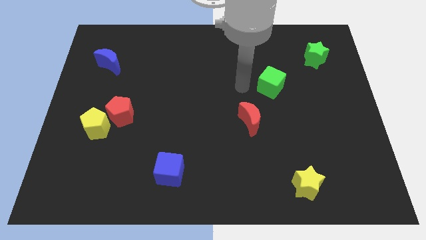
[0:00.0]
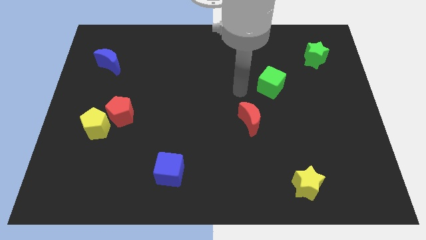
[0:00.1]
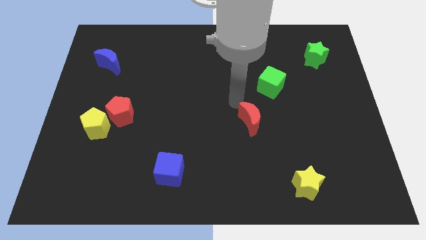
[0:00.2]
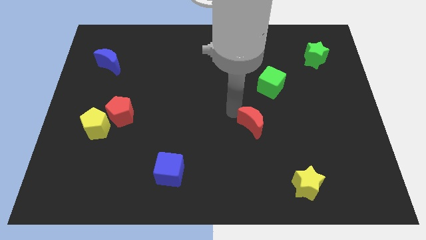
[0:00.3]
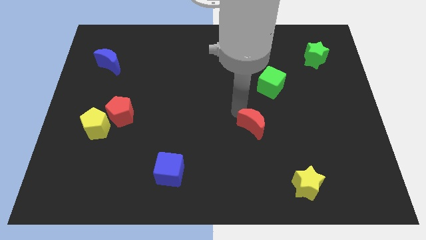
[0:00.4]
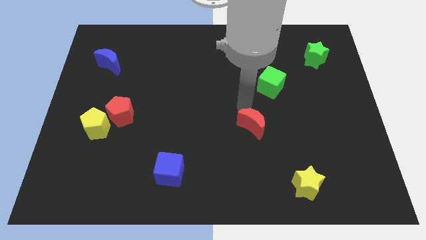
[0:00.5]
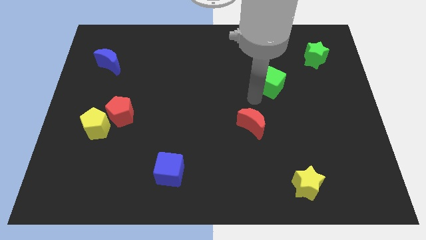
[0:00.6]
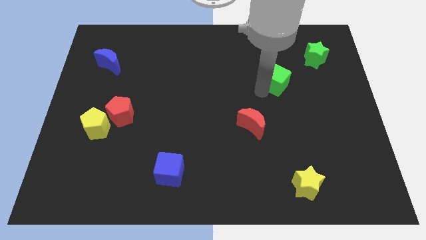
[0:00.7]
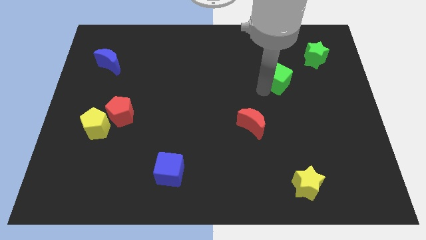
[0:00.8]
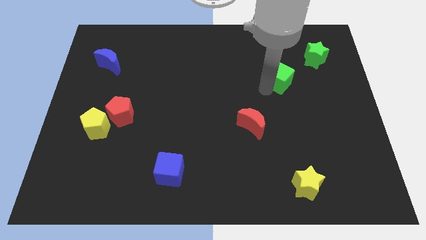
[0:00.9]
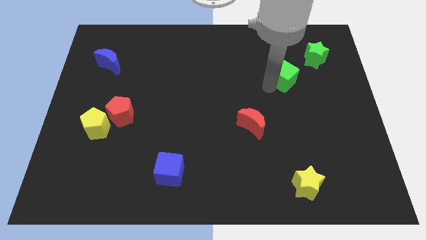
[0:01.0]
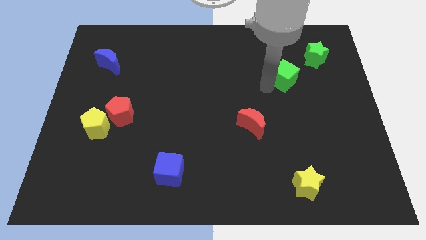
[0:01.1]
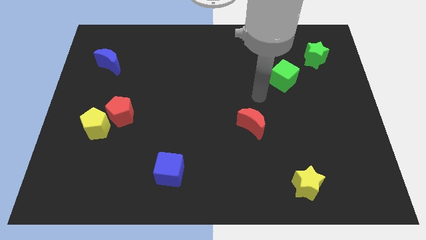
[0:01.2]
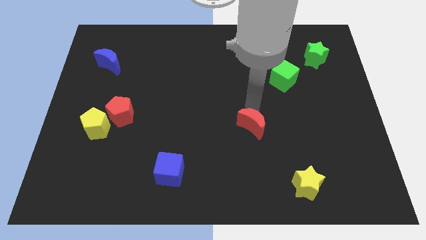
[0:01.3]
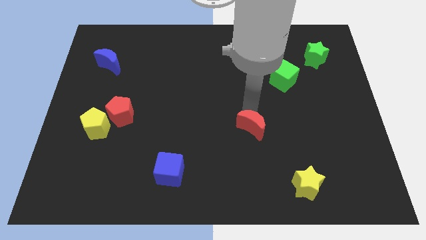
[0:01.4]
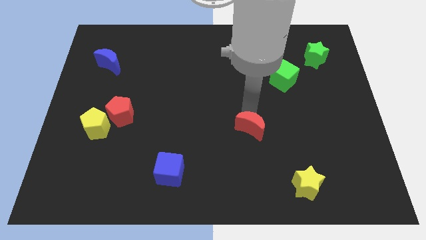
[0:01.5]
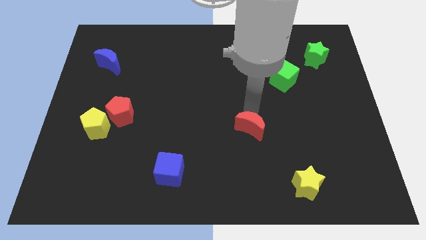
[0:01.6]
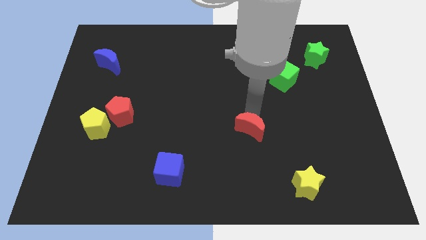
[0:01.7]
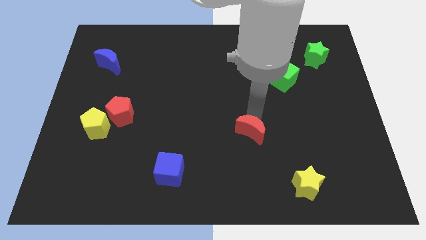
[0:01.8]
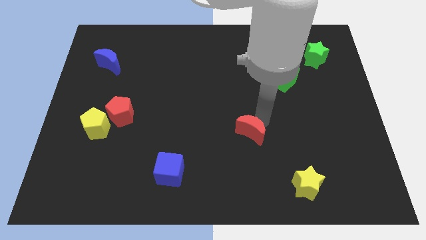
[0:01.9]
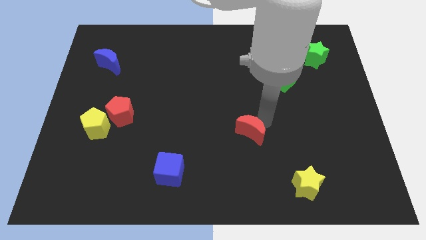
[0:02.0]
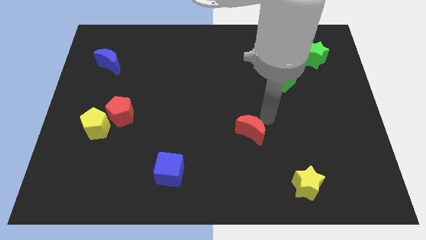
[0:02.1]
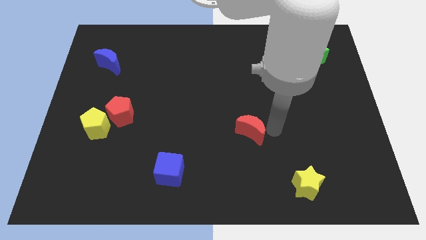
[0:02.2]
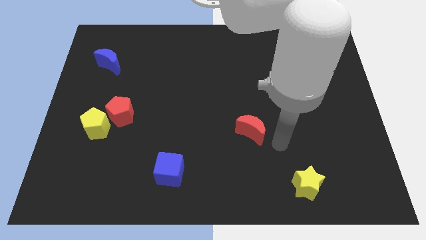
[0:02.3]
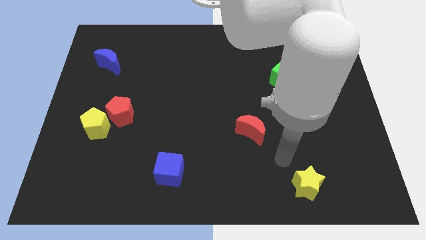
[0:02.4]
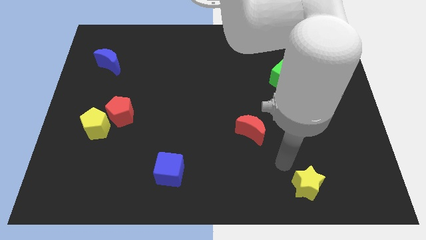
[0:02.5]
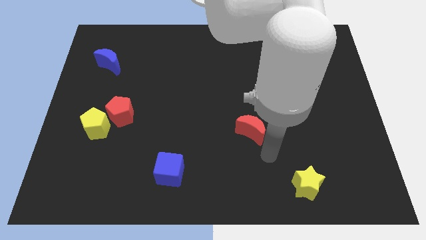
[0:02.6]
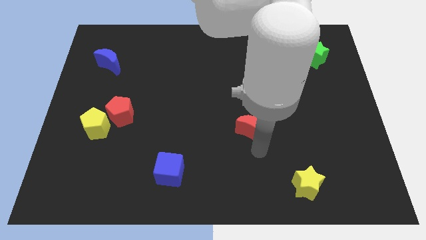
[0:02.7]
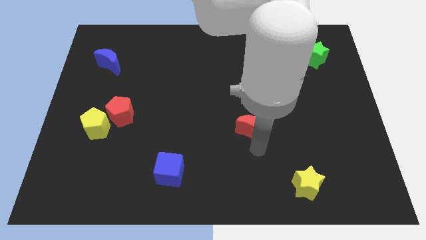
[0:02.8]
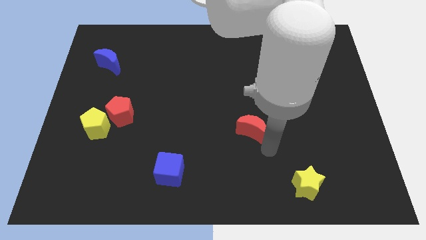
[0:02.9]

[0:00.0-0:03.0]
drag the red moon slightly downwards

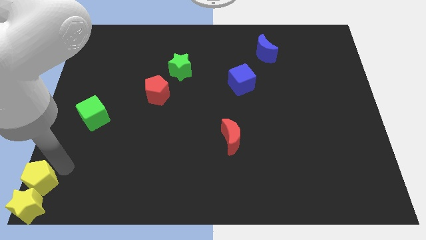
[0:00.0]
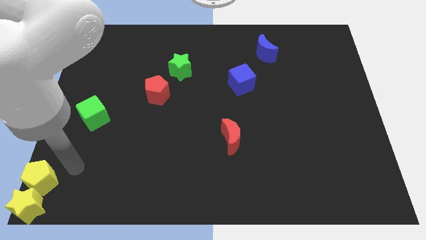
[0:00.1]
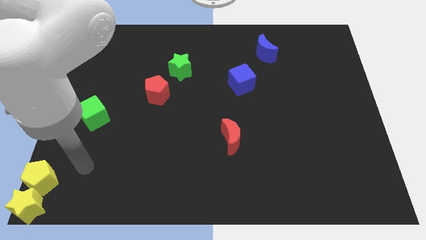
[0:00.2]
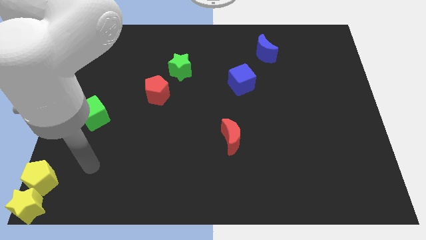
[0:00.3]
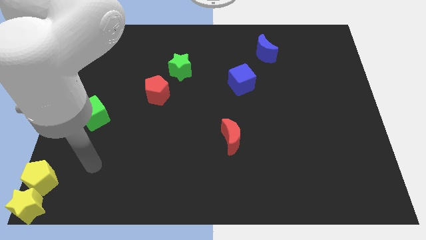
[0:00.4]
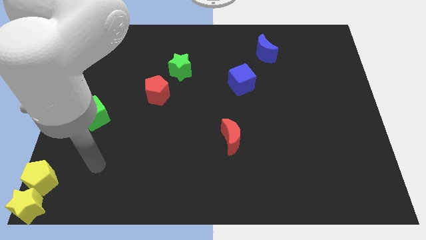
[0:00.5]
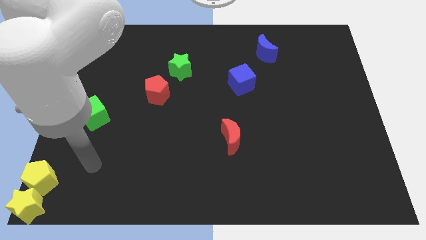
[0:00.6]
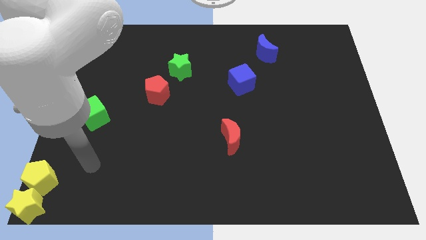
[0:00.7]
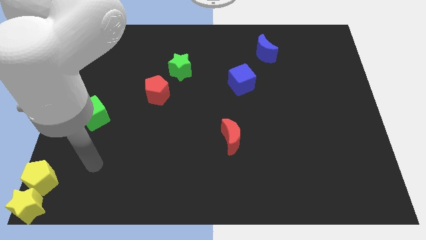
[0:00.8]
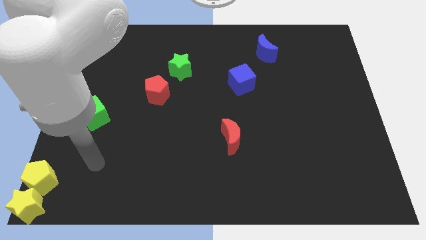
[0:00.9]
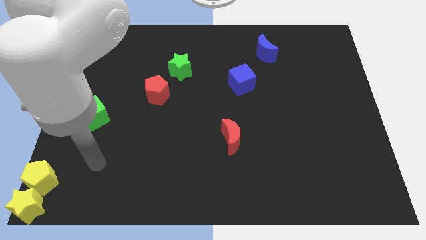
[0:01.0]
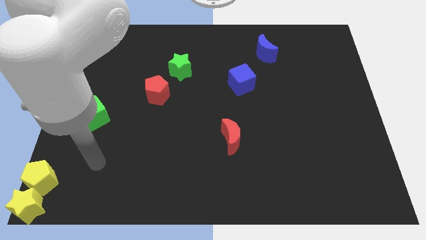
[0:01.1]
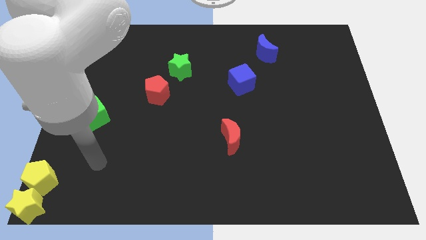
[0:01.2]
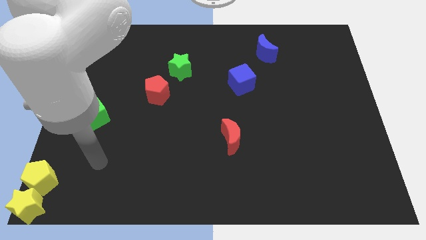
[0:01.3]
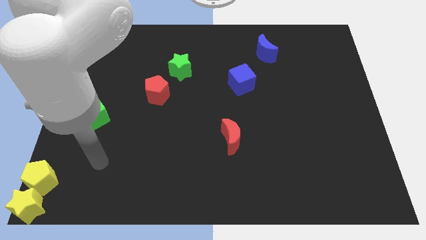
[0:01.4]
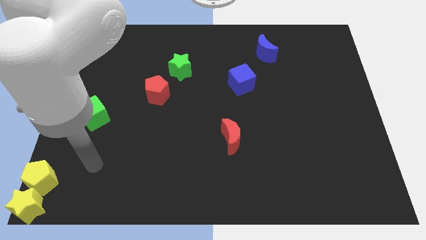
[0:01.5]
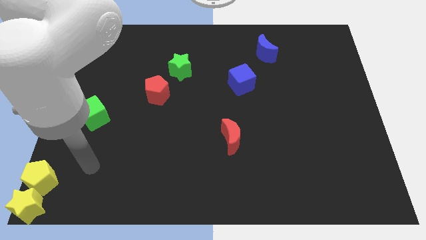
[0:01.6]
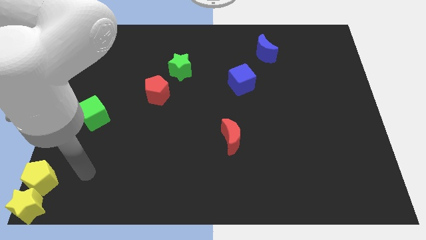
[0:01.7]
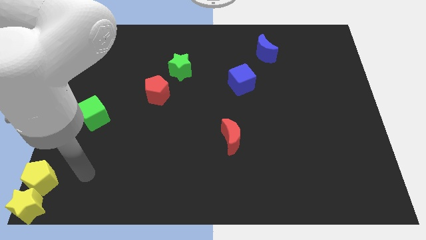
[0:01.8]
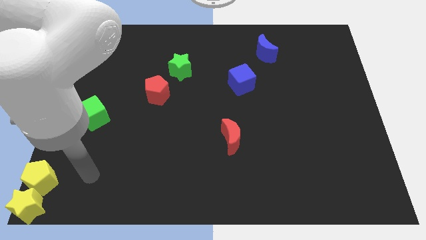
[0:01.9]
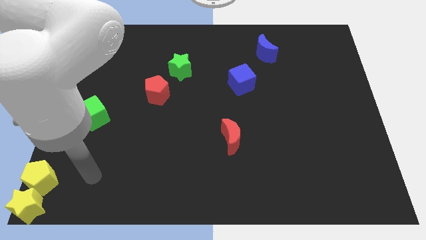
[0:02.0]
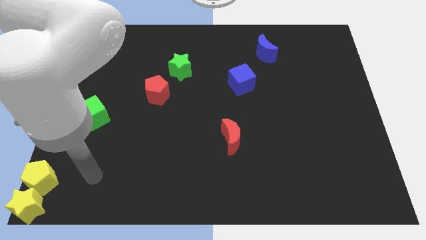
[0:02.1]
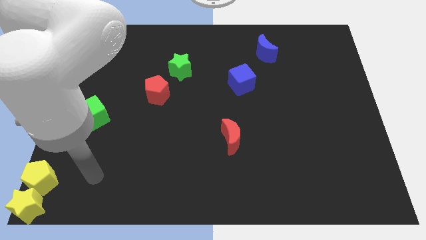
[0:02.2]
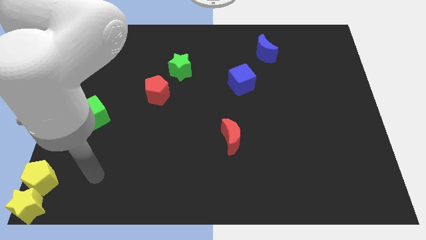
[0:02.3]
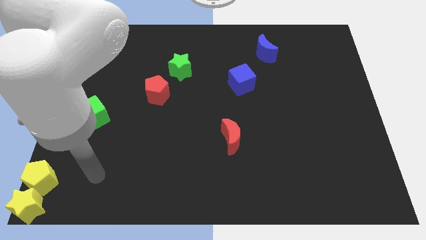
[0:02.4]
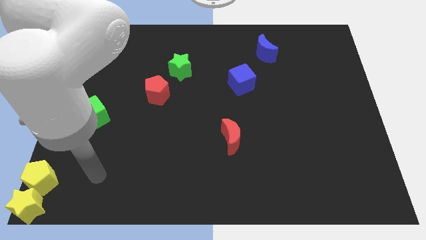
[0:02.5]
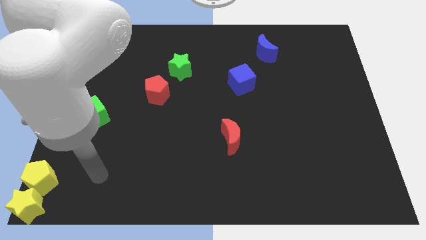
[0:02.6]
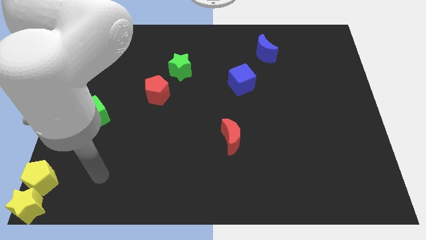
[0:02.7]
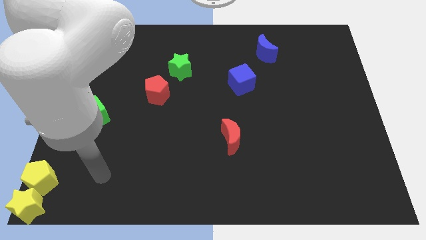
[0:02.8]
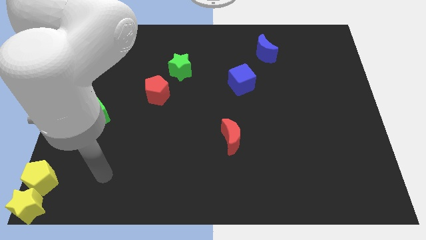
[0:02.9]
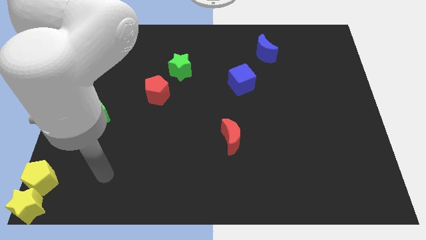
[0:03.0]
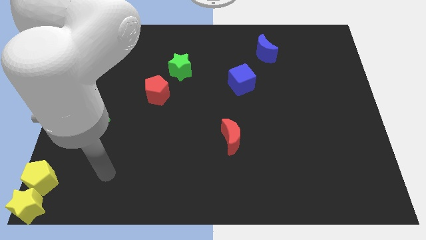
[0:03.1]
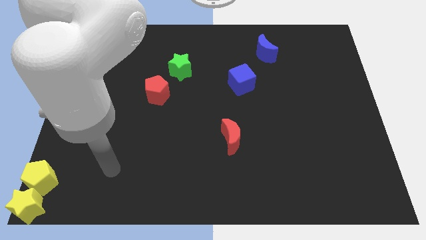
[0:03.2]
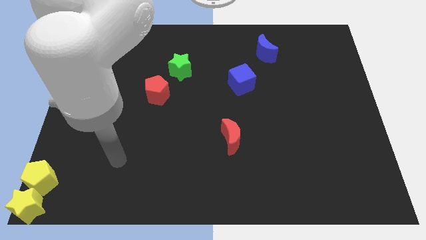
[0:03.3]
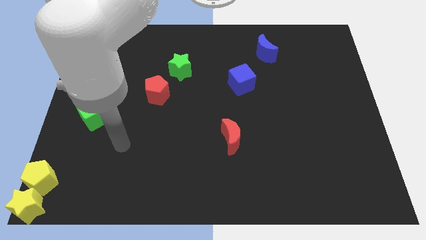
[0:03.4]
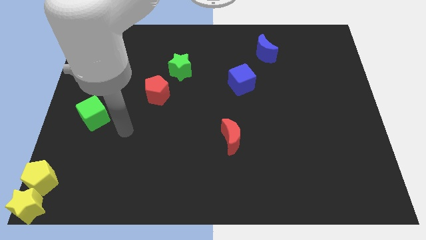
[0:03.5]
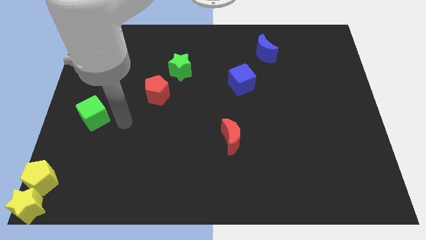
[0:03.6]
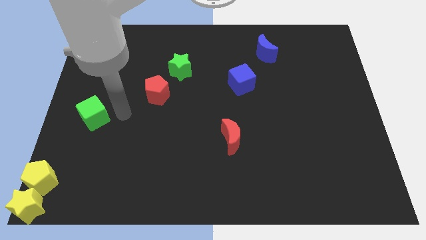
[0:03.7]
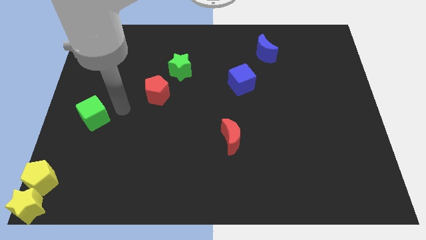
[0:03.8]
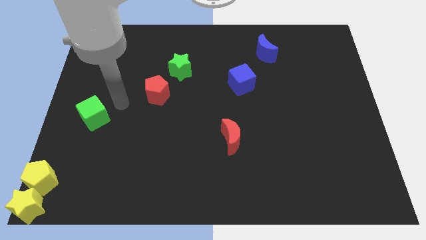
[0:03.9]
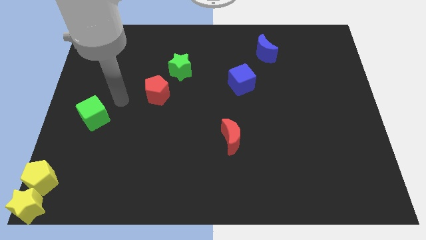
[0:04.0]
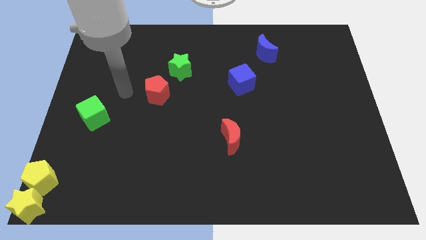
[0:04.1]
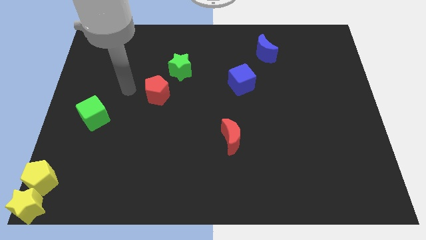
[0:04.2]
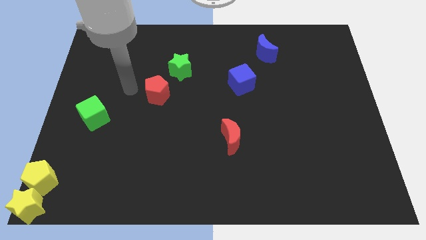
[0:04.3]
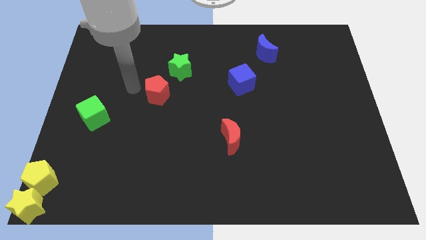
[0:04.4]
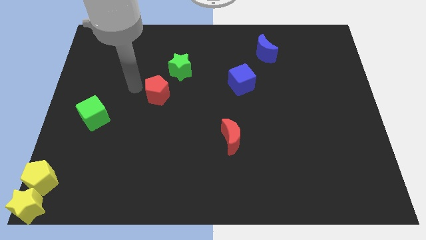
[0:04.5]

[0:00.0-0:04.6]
point the arm to the left of the red pentagon

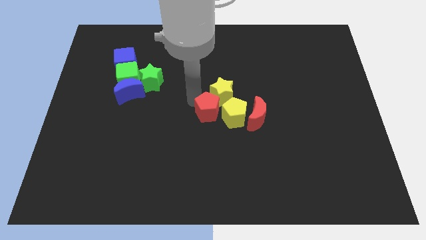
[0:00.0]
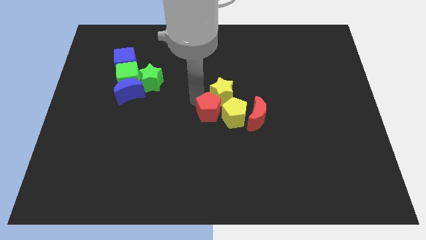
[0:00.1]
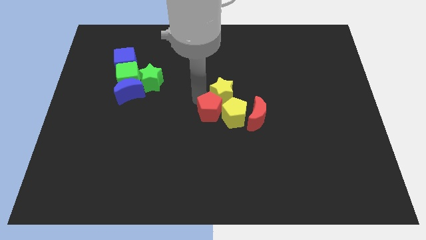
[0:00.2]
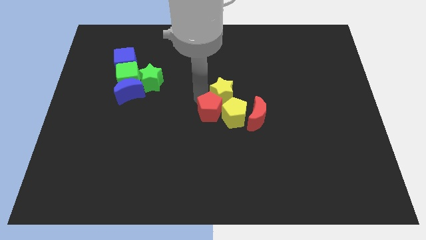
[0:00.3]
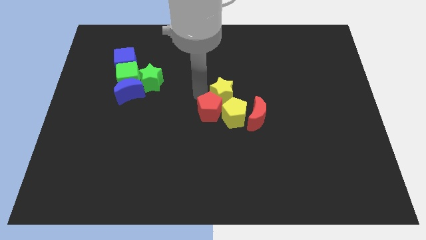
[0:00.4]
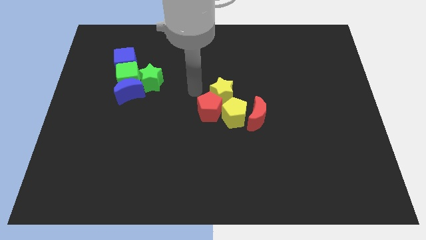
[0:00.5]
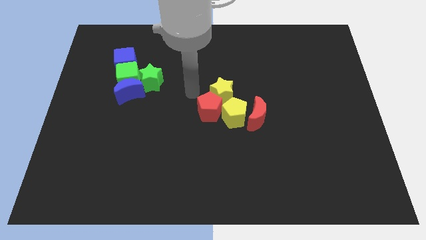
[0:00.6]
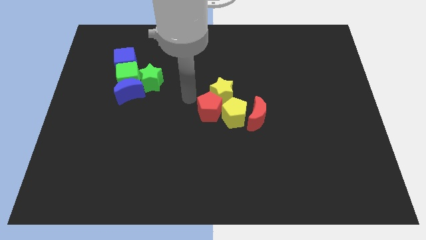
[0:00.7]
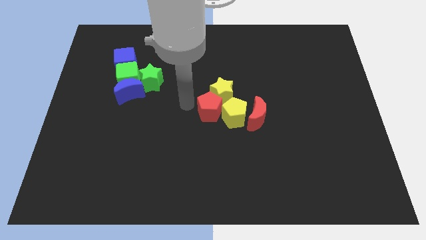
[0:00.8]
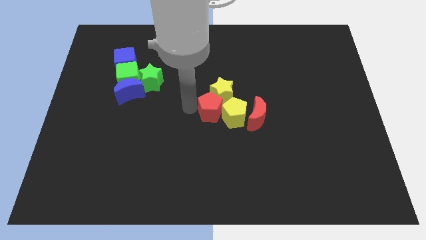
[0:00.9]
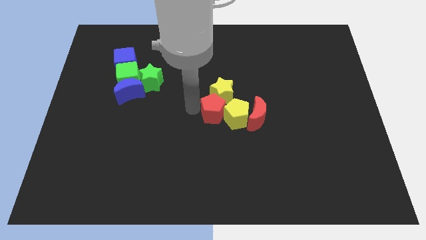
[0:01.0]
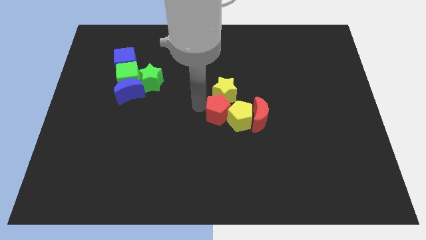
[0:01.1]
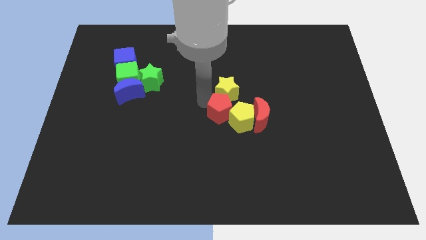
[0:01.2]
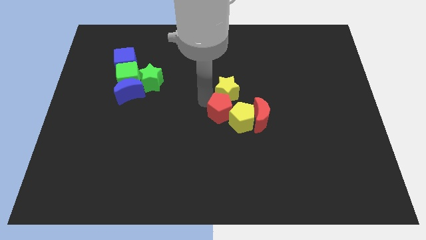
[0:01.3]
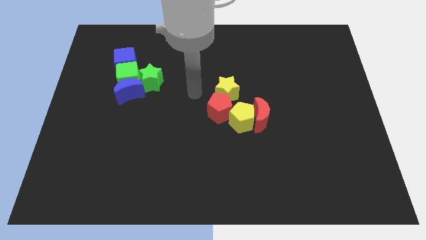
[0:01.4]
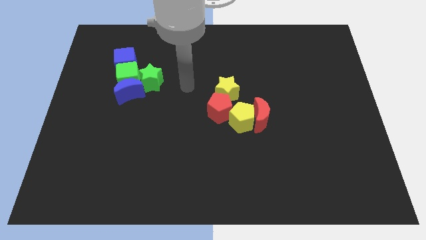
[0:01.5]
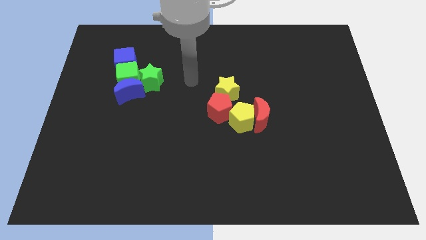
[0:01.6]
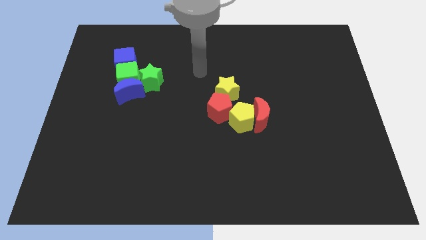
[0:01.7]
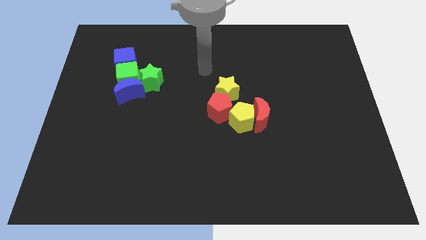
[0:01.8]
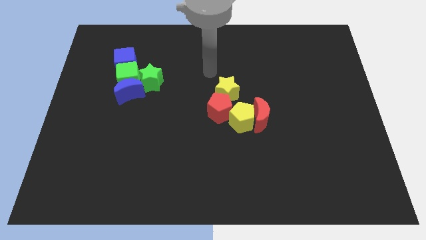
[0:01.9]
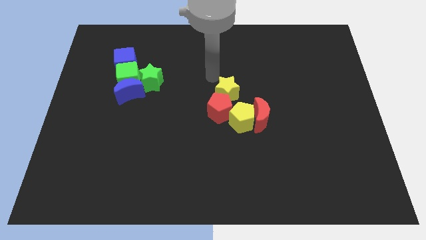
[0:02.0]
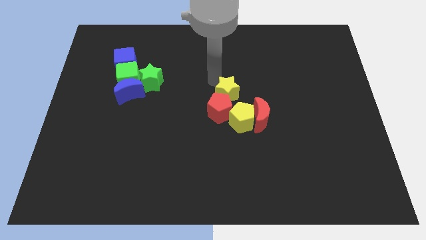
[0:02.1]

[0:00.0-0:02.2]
move the red pentagon into the yellow pentagon
